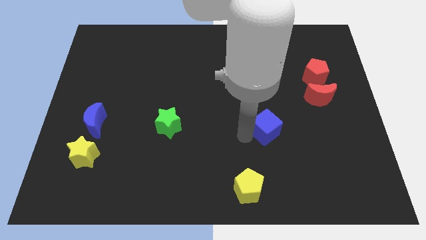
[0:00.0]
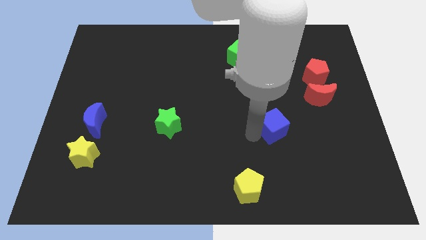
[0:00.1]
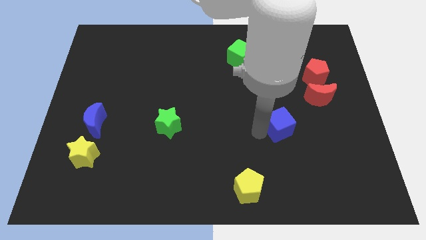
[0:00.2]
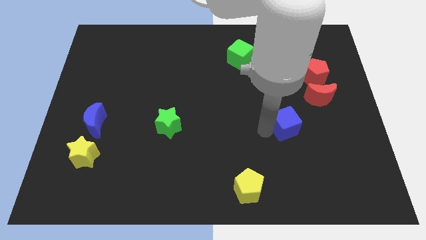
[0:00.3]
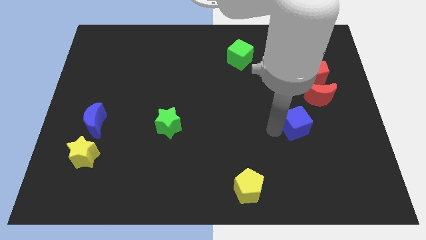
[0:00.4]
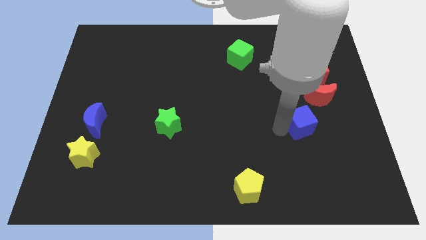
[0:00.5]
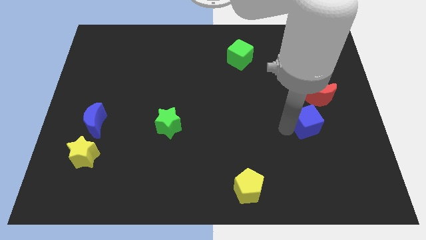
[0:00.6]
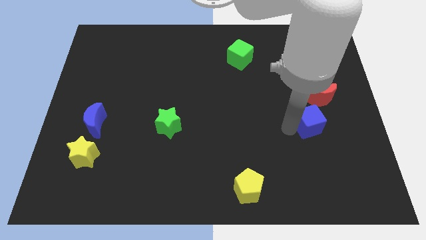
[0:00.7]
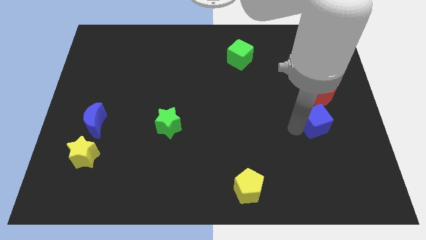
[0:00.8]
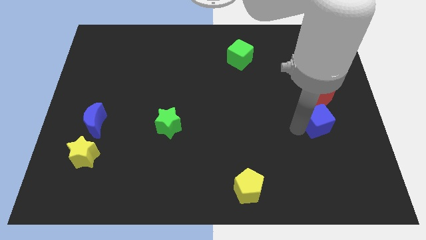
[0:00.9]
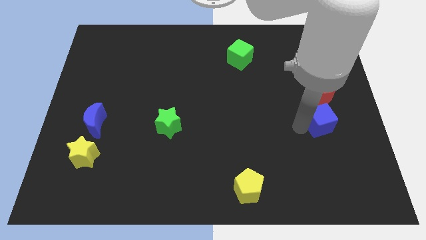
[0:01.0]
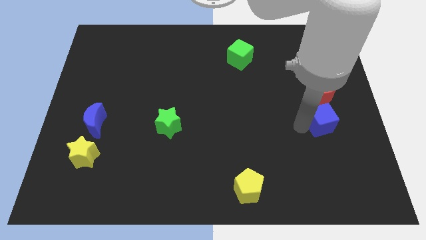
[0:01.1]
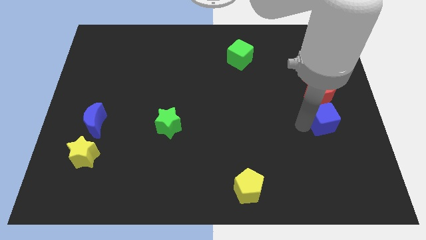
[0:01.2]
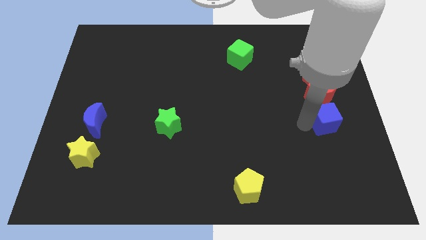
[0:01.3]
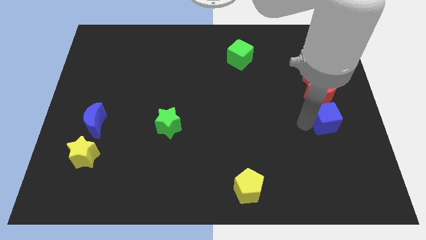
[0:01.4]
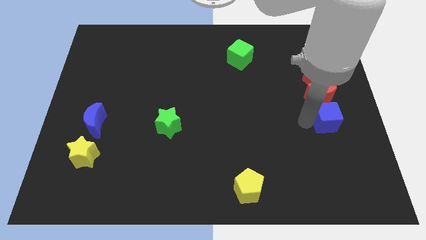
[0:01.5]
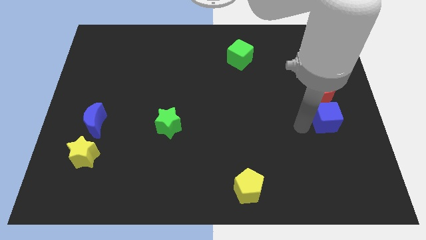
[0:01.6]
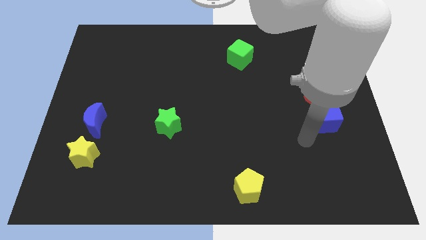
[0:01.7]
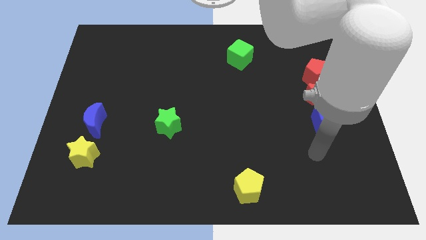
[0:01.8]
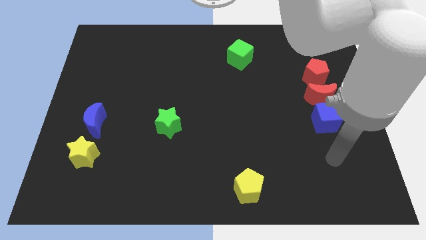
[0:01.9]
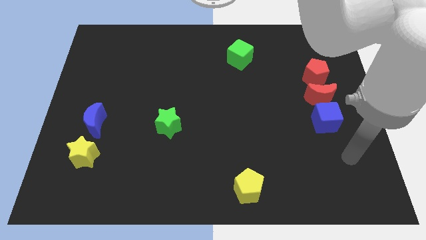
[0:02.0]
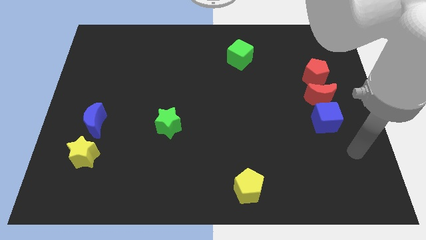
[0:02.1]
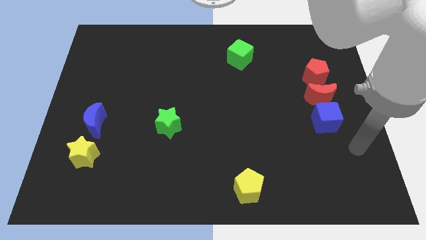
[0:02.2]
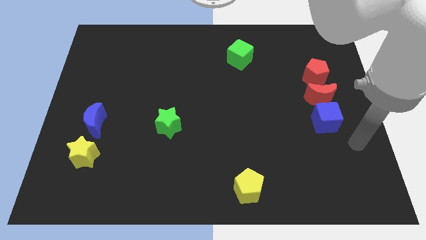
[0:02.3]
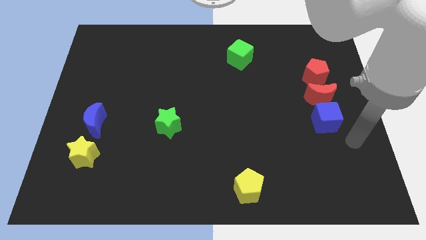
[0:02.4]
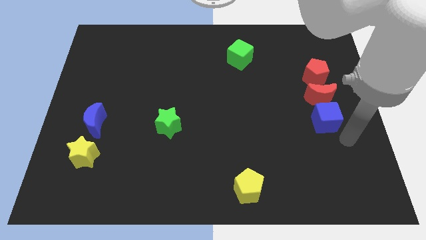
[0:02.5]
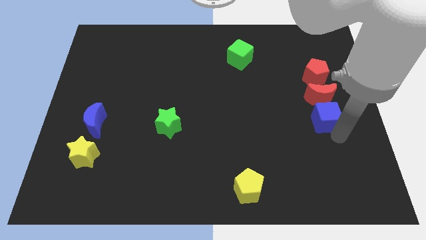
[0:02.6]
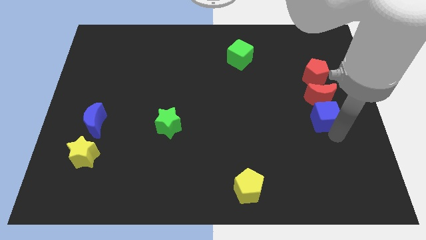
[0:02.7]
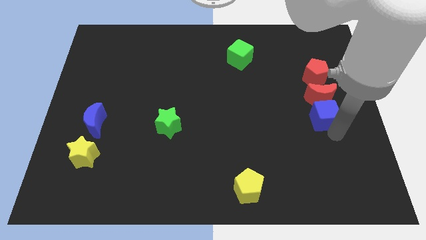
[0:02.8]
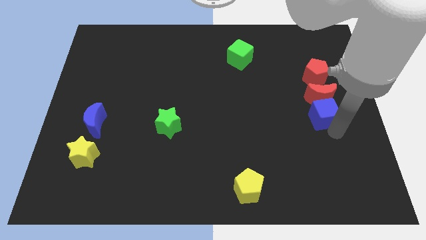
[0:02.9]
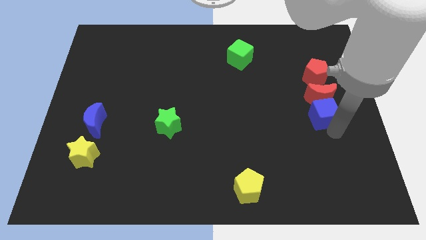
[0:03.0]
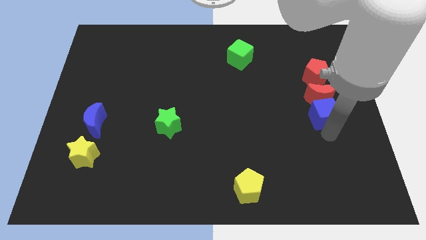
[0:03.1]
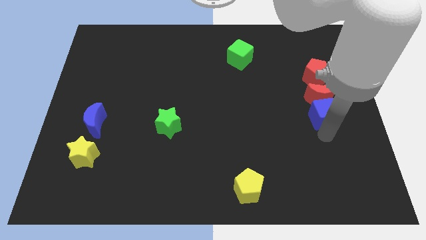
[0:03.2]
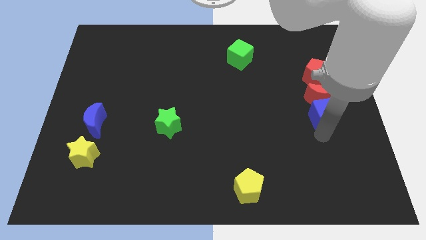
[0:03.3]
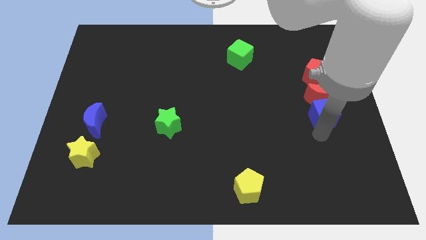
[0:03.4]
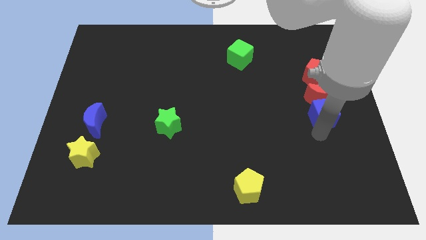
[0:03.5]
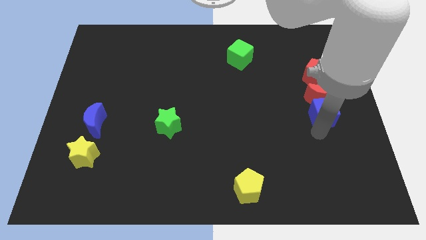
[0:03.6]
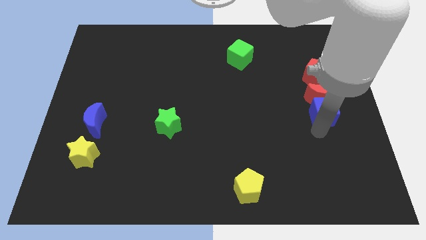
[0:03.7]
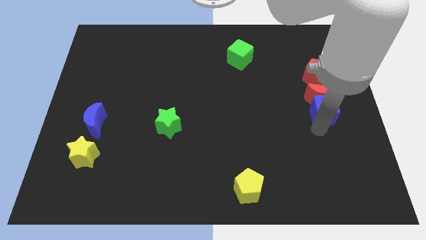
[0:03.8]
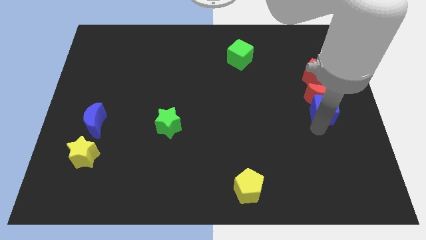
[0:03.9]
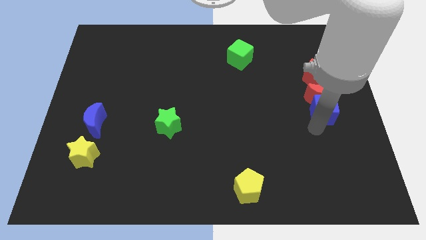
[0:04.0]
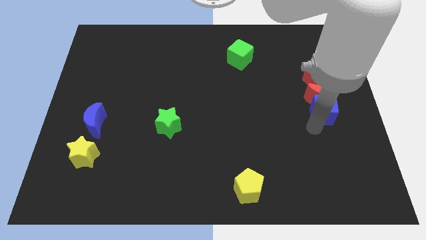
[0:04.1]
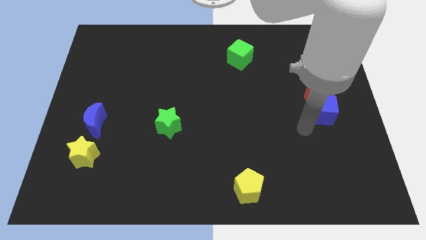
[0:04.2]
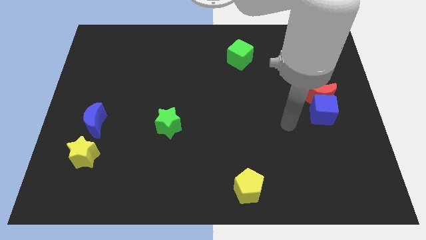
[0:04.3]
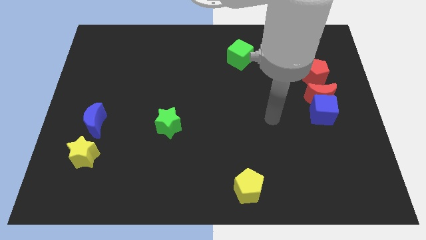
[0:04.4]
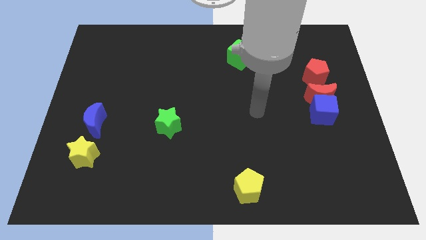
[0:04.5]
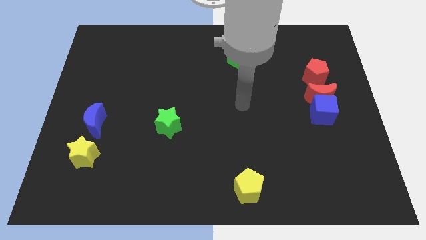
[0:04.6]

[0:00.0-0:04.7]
push the blue cube into the red crescent

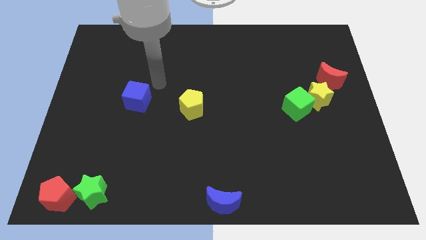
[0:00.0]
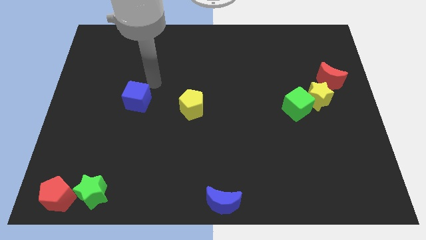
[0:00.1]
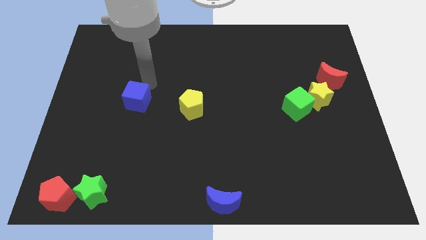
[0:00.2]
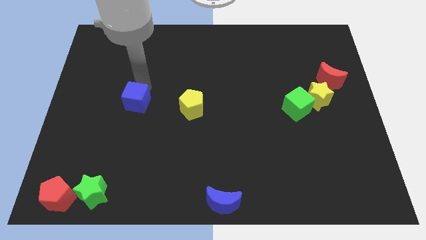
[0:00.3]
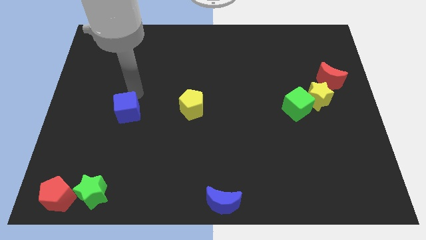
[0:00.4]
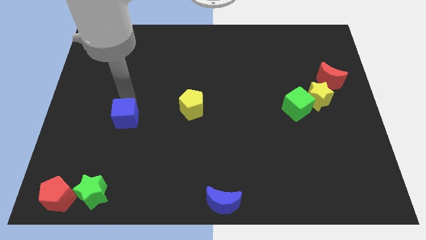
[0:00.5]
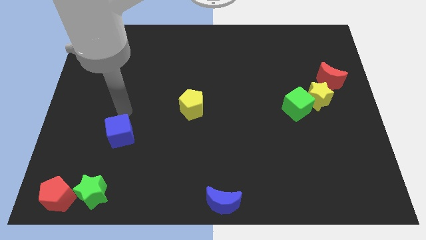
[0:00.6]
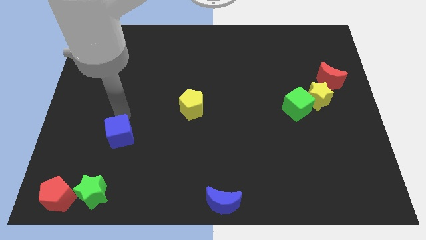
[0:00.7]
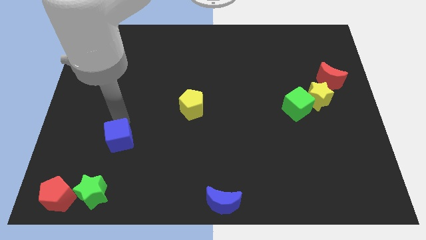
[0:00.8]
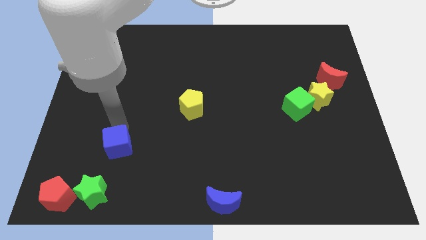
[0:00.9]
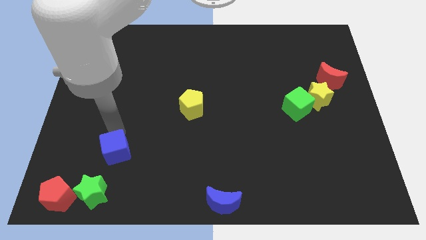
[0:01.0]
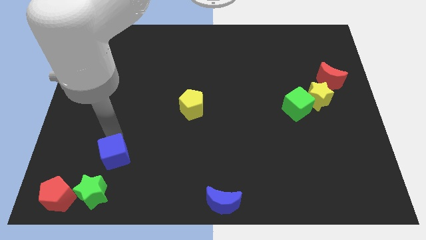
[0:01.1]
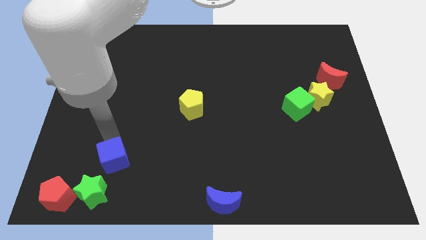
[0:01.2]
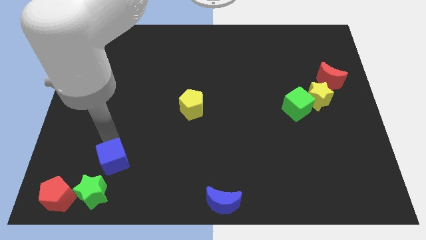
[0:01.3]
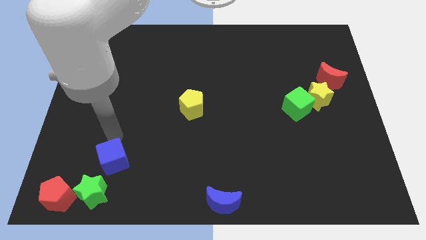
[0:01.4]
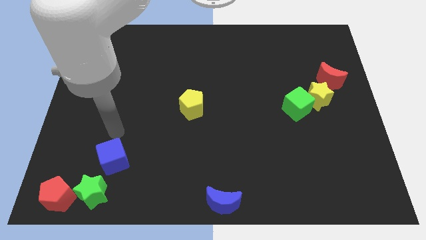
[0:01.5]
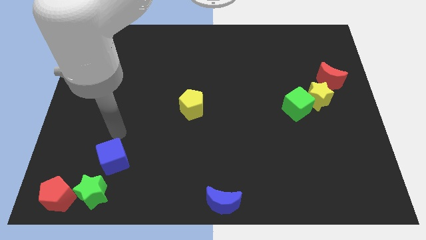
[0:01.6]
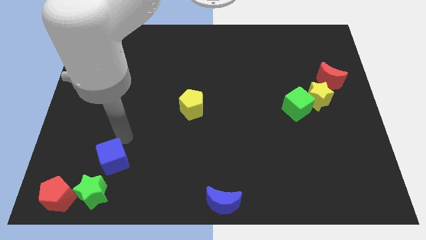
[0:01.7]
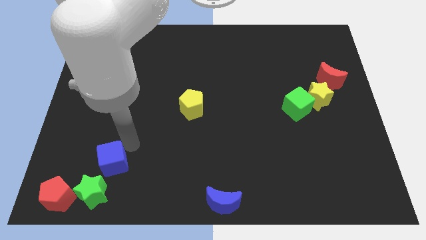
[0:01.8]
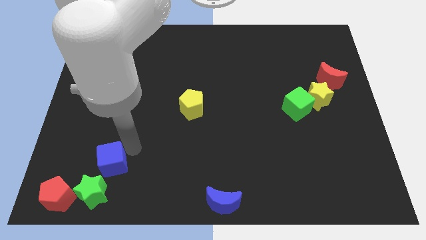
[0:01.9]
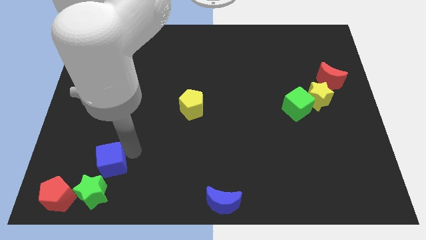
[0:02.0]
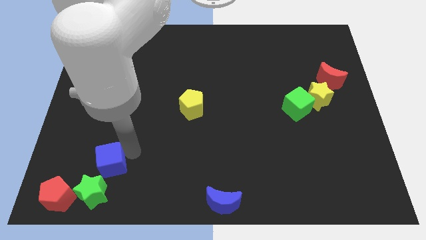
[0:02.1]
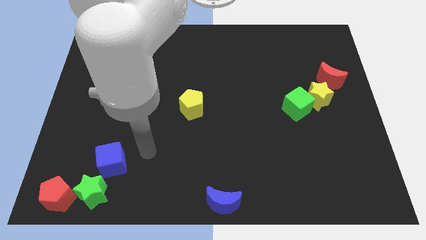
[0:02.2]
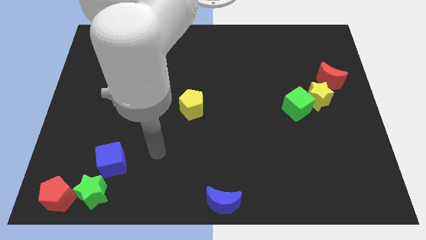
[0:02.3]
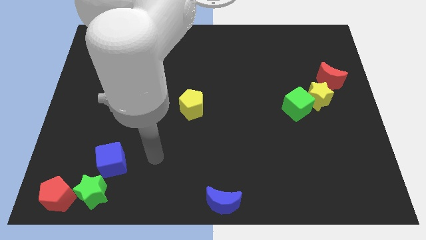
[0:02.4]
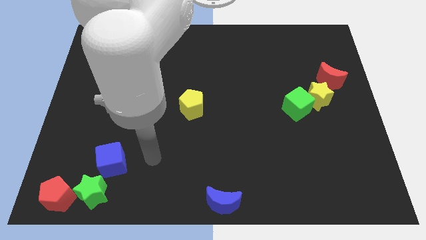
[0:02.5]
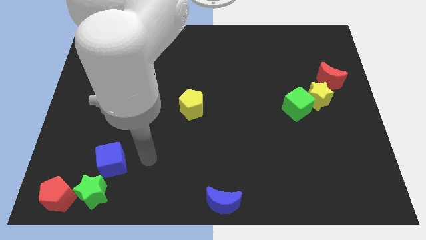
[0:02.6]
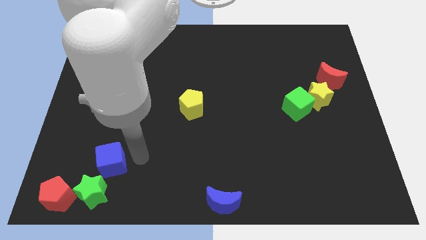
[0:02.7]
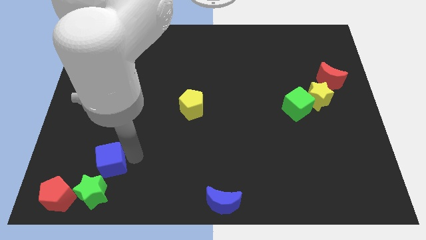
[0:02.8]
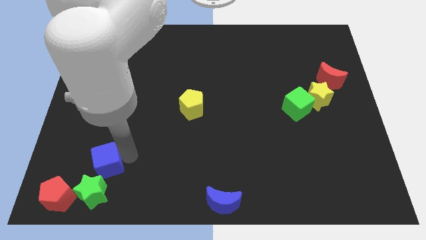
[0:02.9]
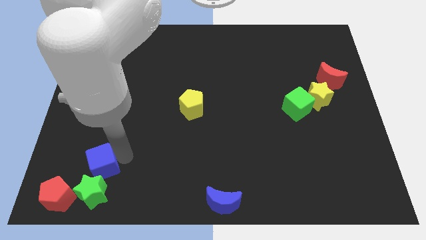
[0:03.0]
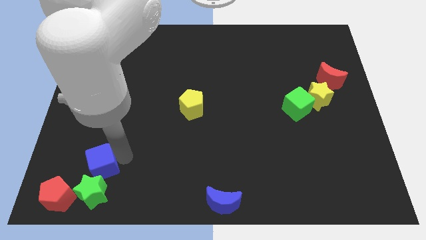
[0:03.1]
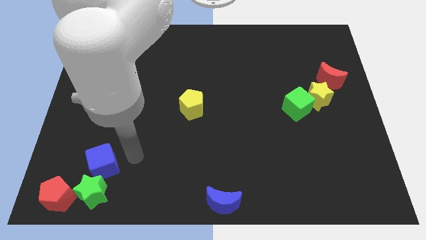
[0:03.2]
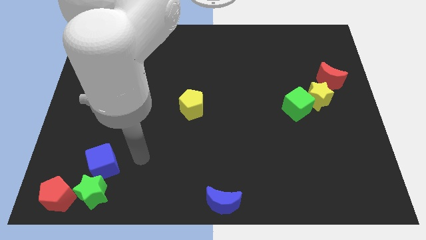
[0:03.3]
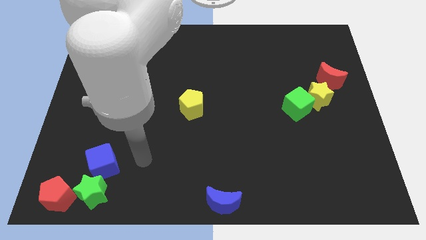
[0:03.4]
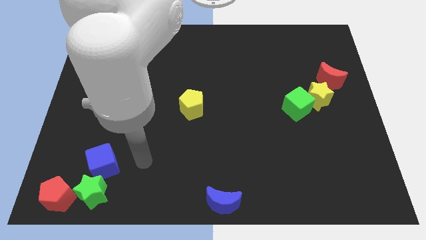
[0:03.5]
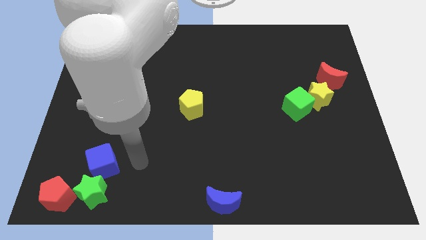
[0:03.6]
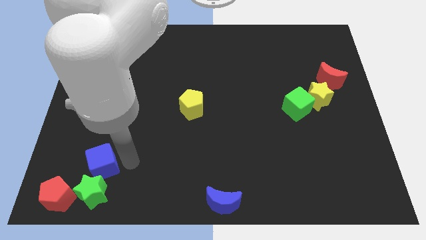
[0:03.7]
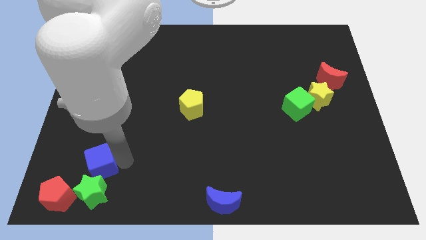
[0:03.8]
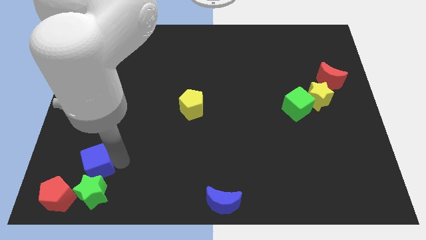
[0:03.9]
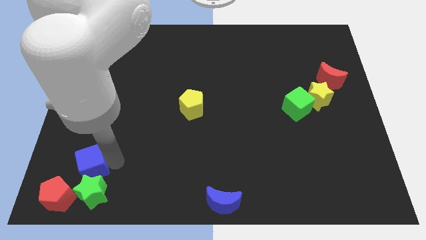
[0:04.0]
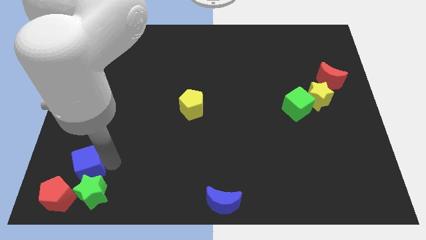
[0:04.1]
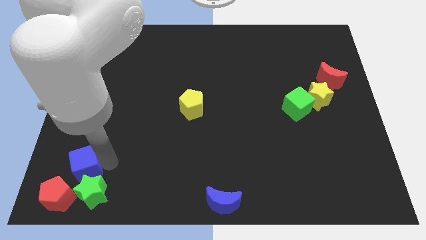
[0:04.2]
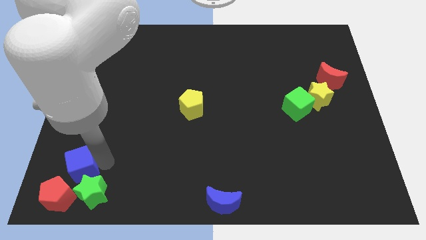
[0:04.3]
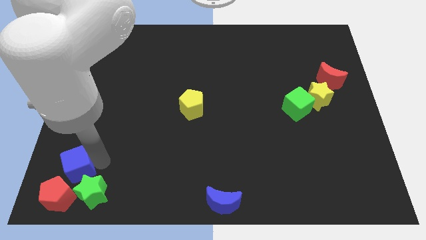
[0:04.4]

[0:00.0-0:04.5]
place blue cube to the top right of red pentagon
